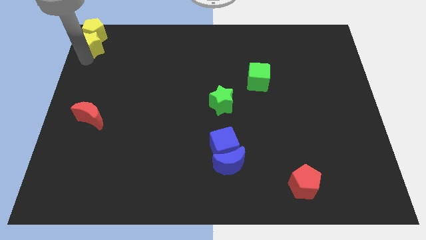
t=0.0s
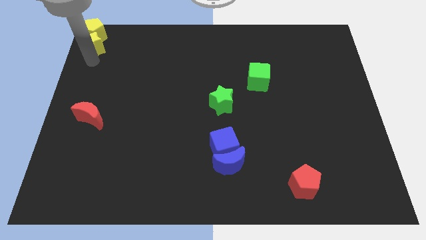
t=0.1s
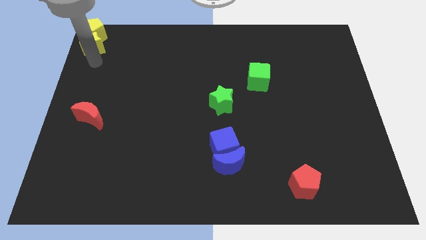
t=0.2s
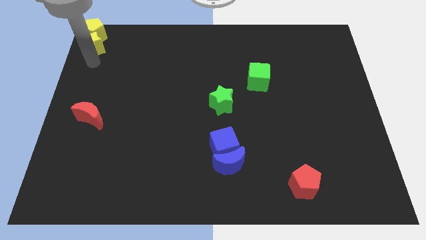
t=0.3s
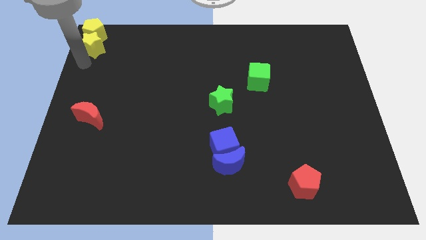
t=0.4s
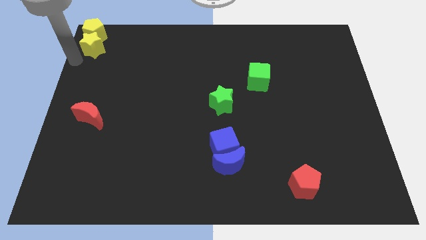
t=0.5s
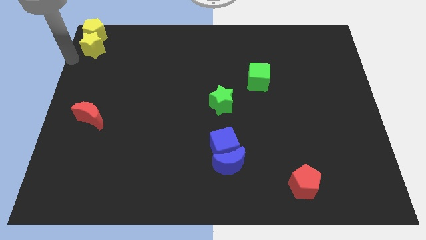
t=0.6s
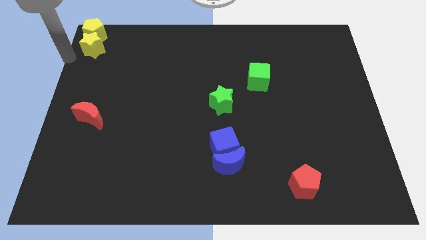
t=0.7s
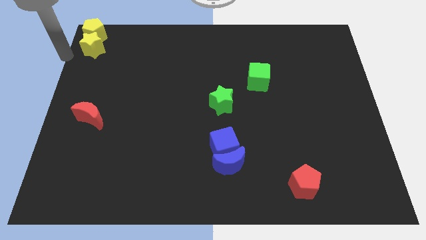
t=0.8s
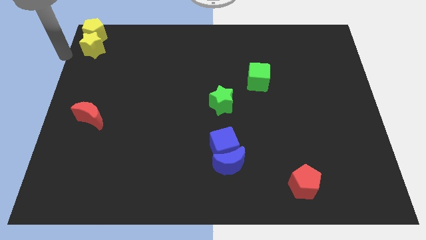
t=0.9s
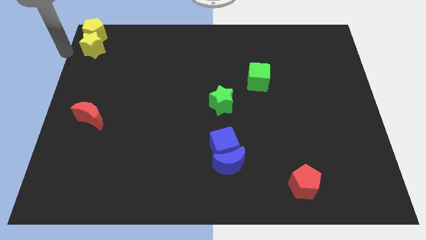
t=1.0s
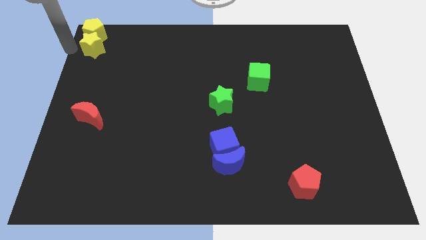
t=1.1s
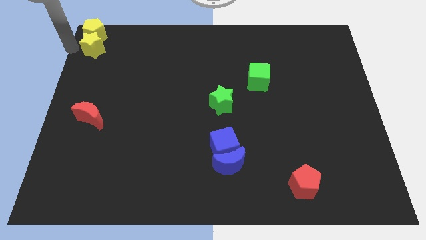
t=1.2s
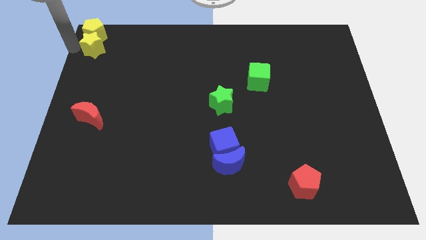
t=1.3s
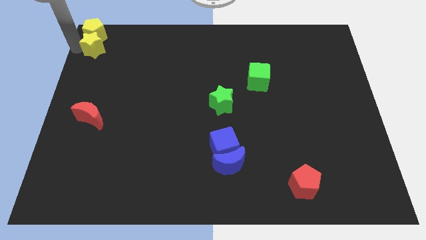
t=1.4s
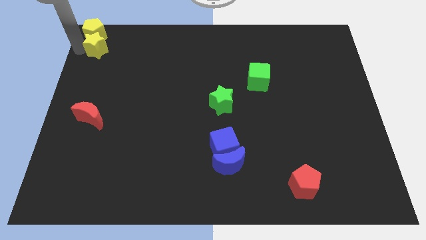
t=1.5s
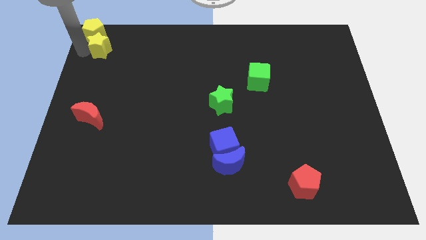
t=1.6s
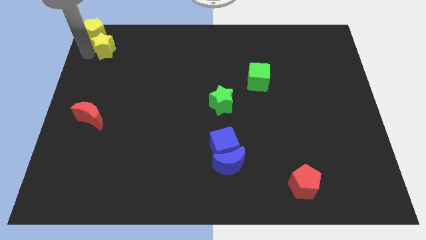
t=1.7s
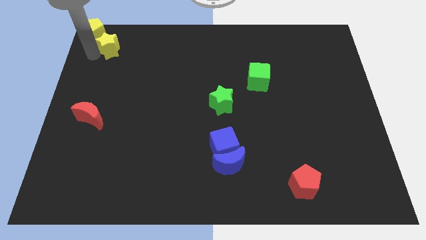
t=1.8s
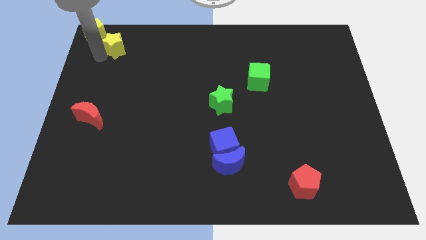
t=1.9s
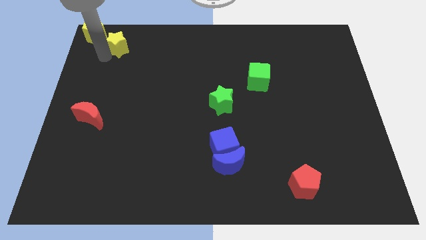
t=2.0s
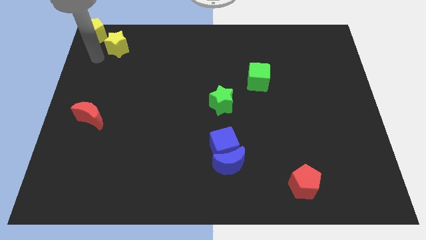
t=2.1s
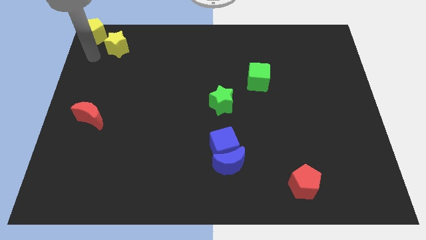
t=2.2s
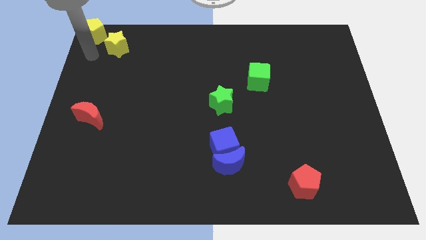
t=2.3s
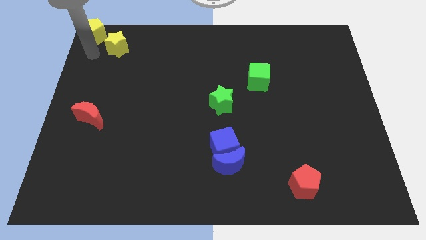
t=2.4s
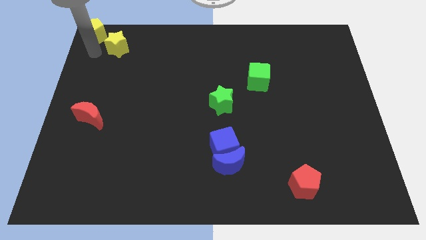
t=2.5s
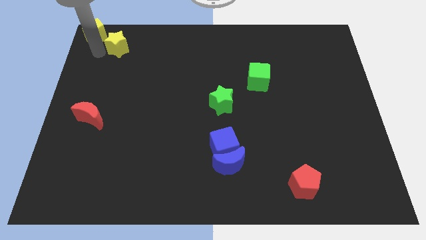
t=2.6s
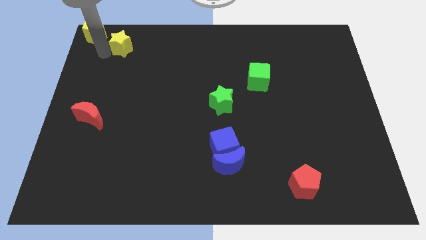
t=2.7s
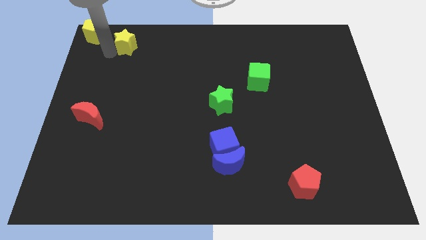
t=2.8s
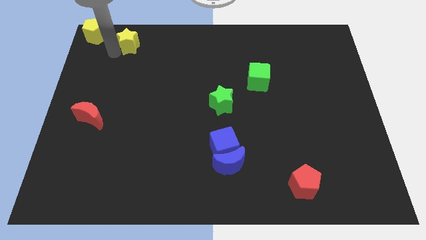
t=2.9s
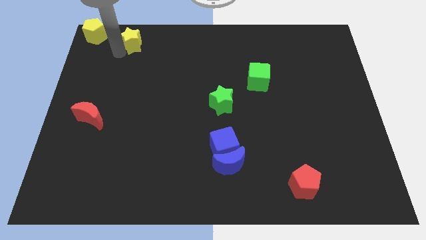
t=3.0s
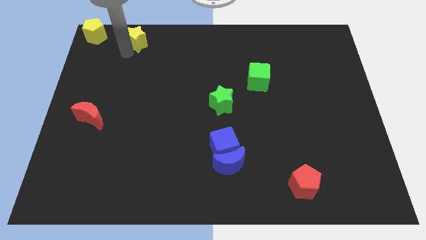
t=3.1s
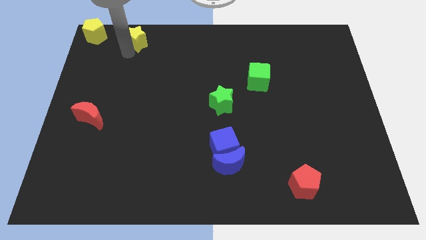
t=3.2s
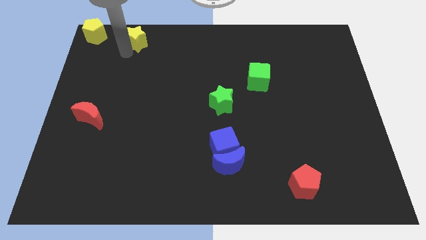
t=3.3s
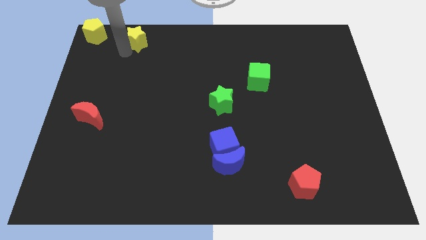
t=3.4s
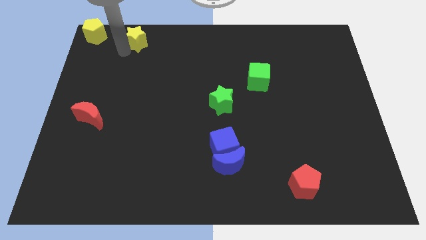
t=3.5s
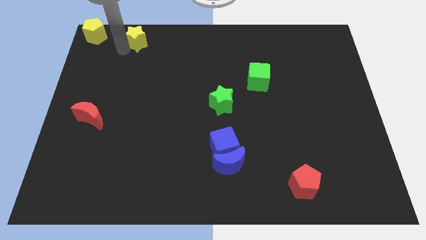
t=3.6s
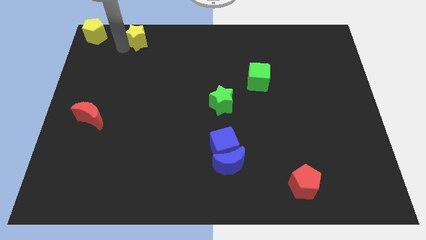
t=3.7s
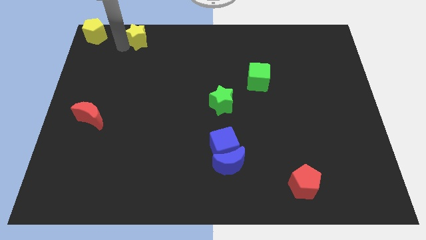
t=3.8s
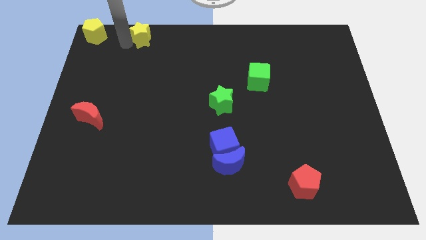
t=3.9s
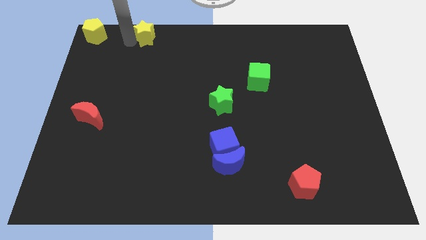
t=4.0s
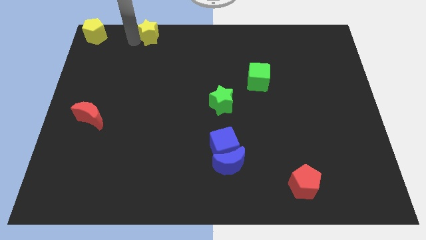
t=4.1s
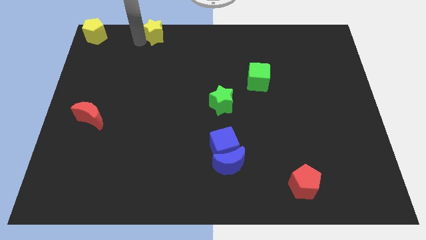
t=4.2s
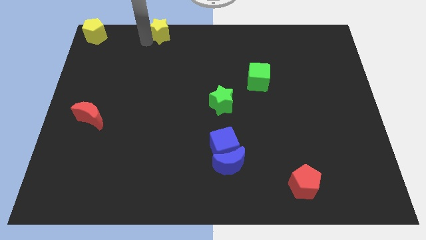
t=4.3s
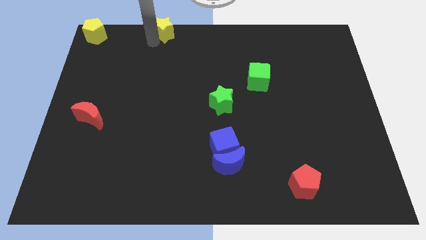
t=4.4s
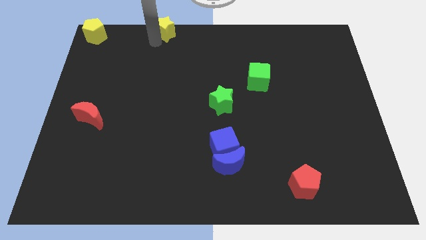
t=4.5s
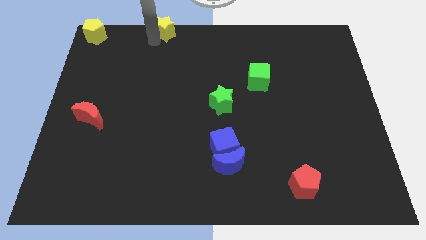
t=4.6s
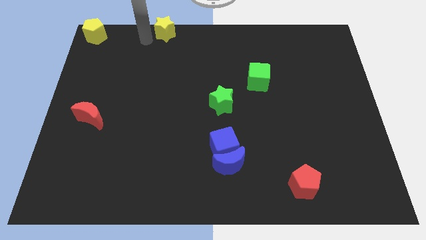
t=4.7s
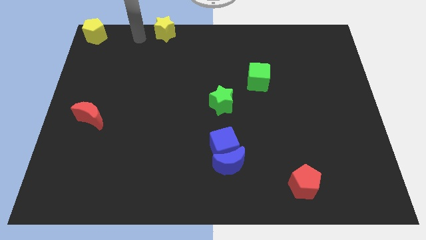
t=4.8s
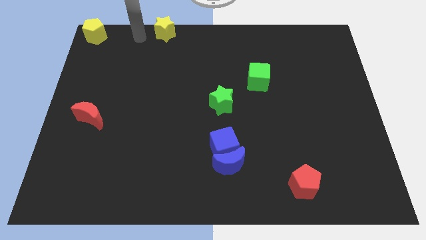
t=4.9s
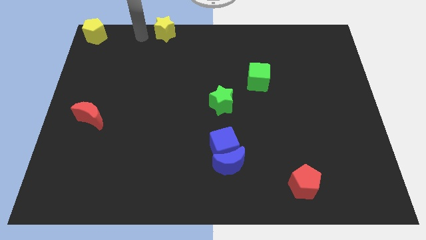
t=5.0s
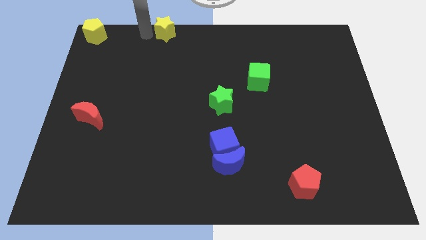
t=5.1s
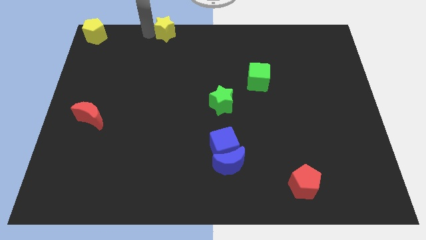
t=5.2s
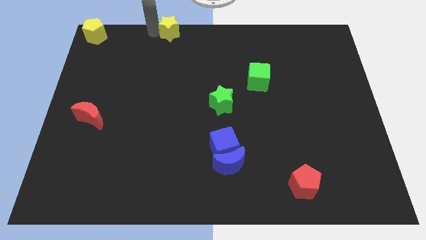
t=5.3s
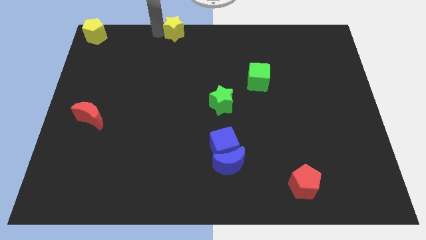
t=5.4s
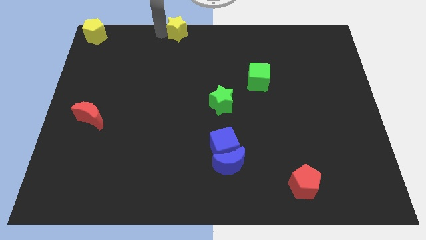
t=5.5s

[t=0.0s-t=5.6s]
push the yellow star slightly towards the right side of the board

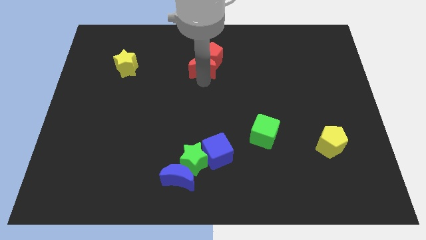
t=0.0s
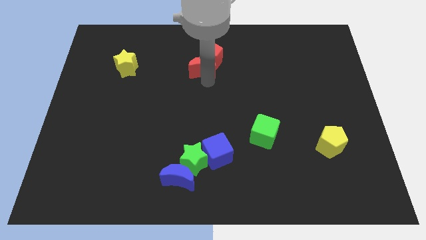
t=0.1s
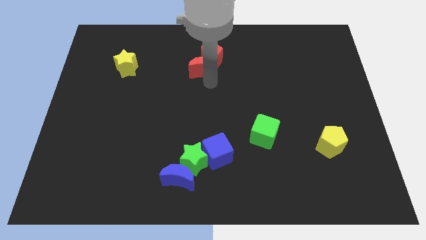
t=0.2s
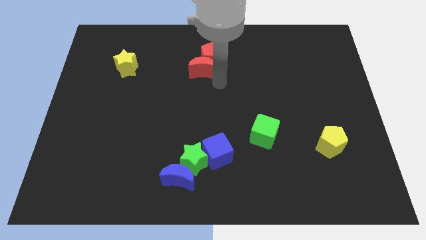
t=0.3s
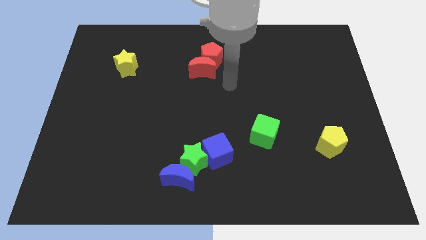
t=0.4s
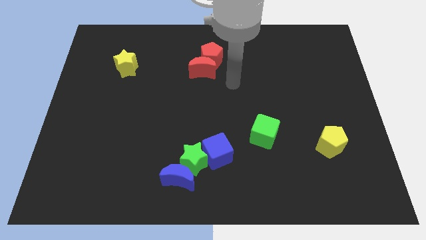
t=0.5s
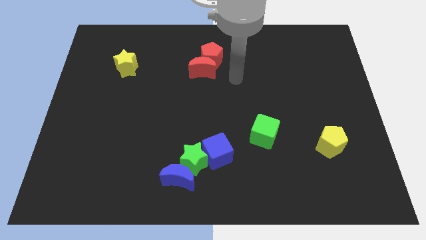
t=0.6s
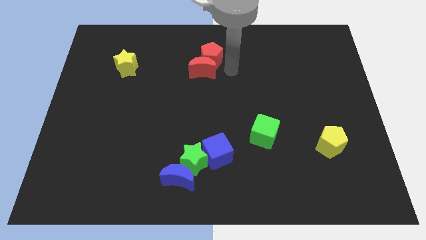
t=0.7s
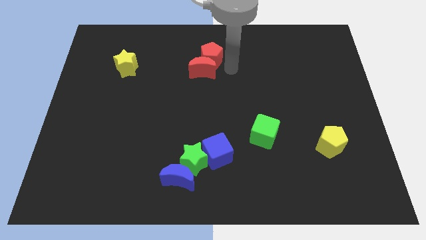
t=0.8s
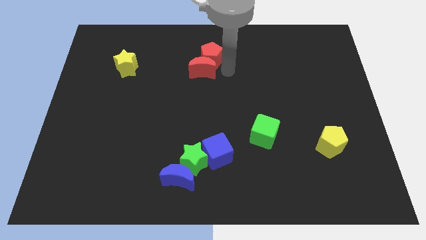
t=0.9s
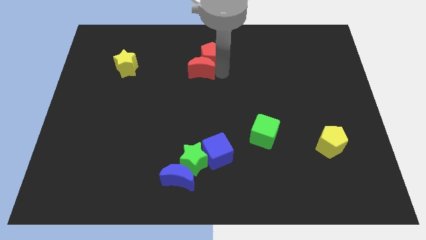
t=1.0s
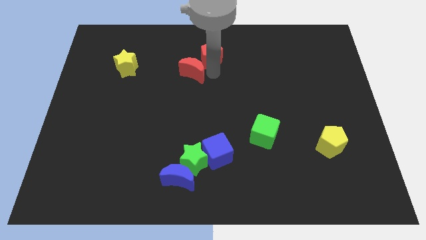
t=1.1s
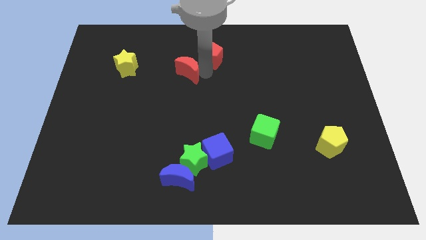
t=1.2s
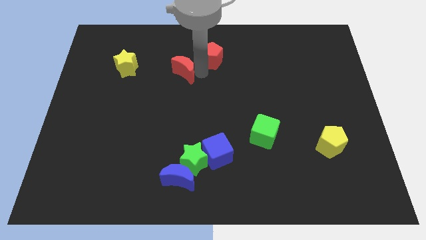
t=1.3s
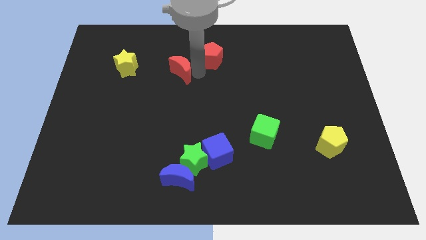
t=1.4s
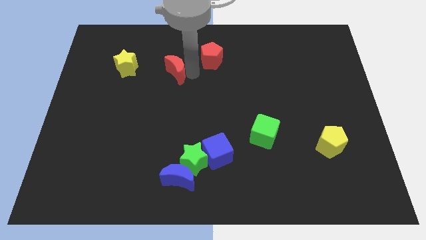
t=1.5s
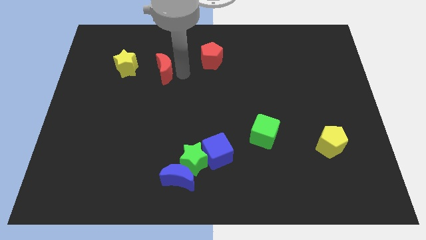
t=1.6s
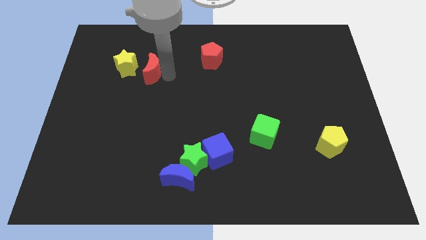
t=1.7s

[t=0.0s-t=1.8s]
push the red crescent slightly to the left

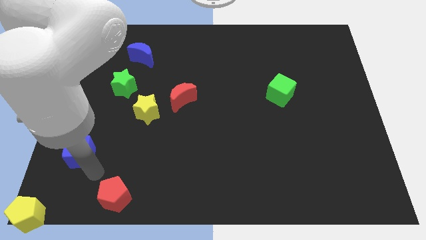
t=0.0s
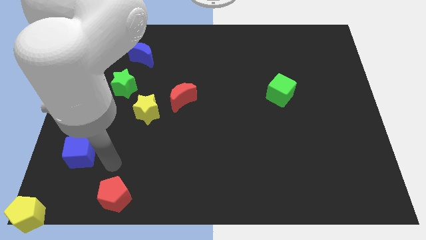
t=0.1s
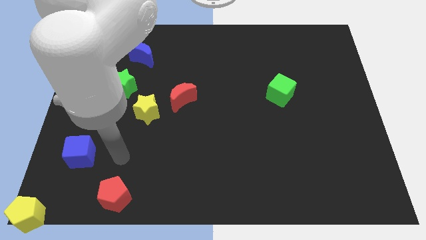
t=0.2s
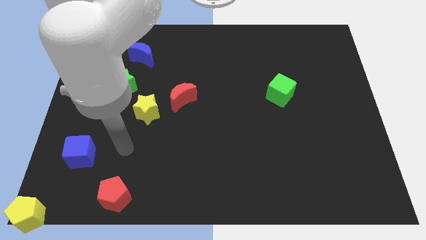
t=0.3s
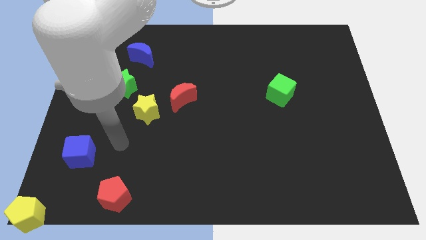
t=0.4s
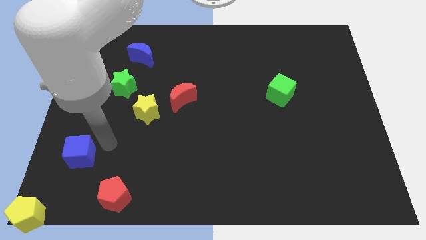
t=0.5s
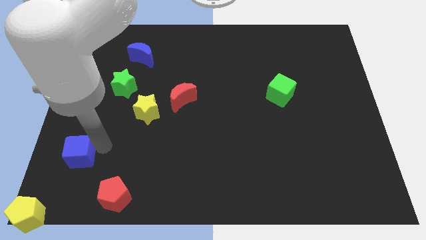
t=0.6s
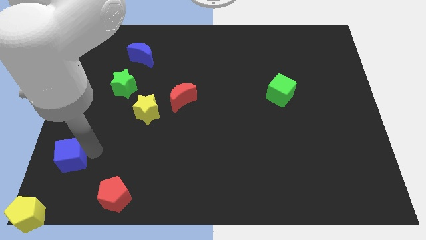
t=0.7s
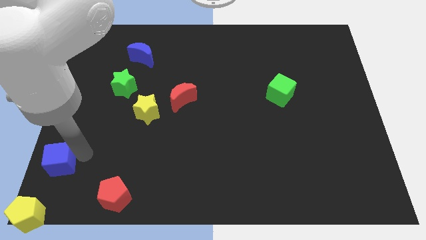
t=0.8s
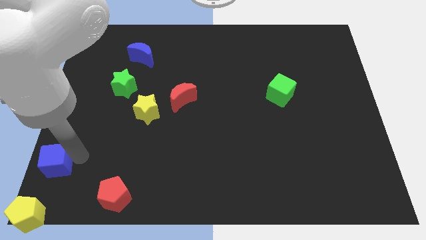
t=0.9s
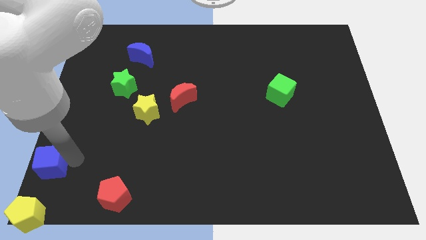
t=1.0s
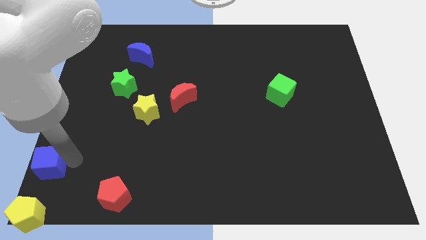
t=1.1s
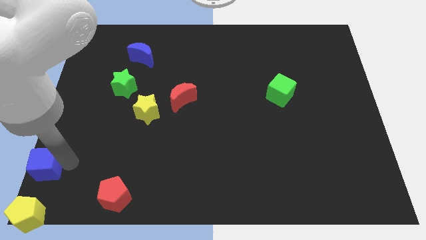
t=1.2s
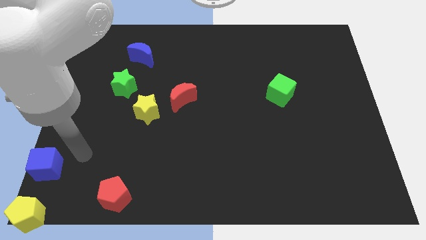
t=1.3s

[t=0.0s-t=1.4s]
move blue cube at the top of the yellow pentagon

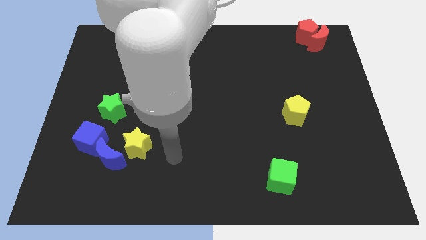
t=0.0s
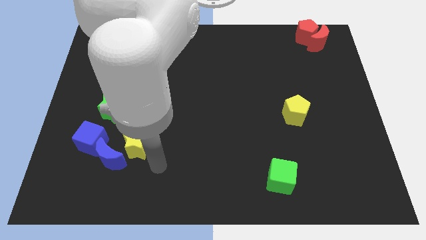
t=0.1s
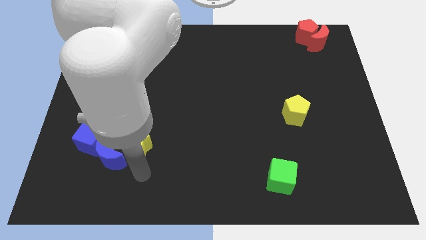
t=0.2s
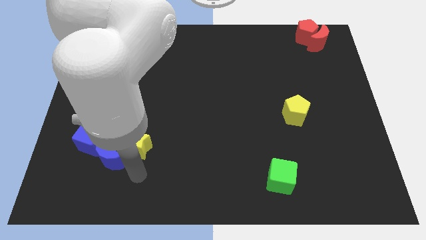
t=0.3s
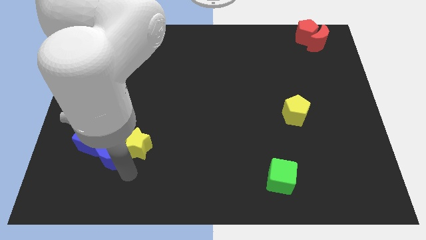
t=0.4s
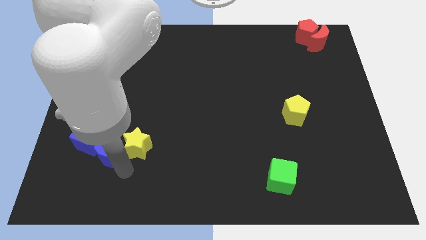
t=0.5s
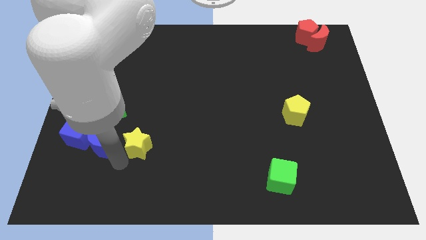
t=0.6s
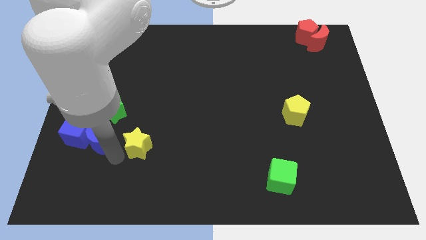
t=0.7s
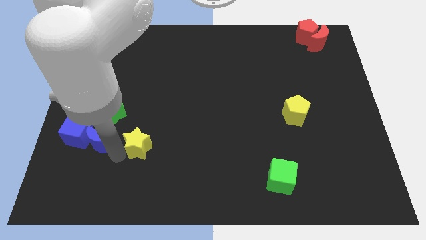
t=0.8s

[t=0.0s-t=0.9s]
slightly push the blue crescent along the blue cube to left side of the board
